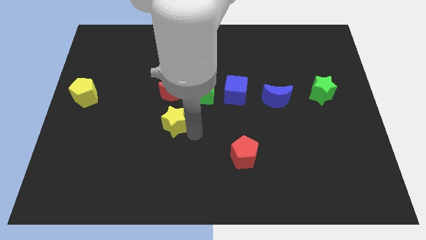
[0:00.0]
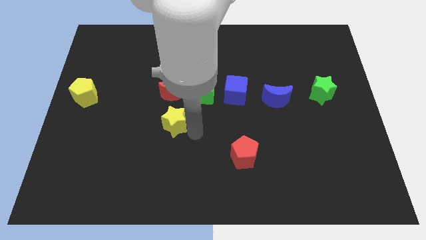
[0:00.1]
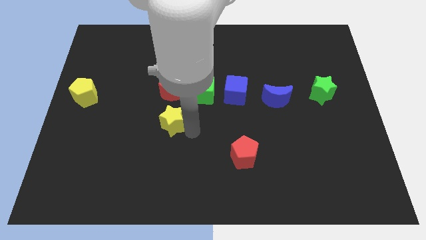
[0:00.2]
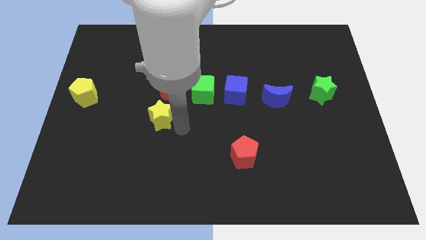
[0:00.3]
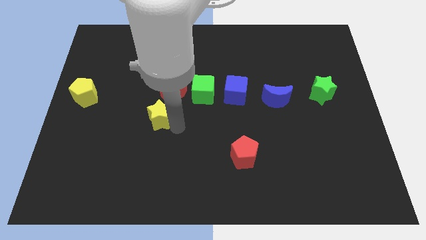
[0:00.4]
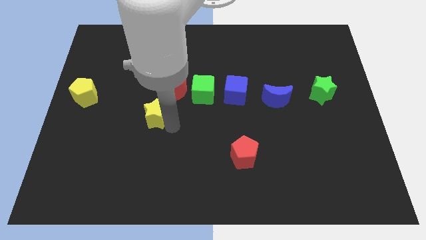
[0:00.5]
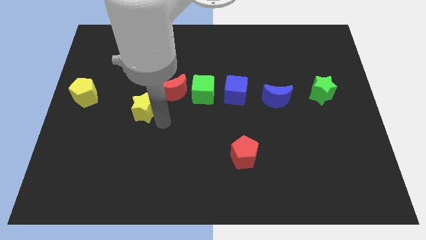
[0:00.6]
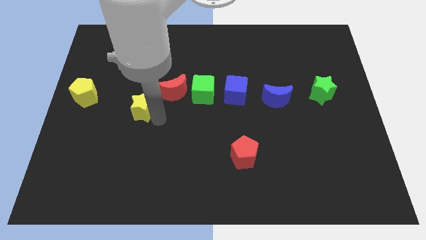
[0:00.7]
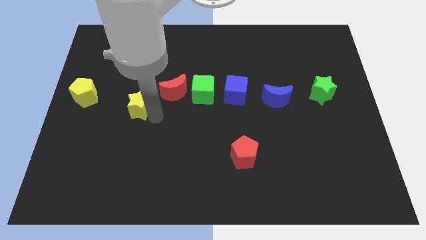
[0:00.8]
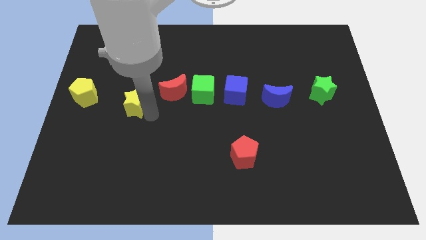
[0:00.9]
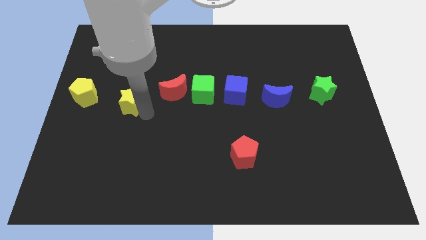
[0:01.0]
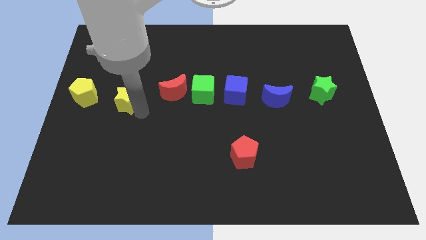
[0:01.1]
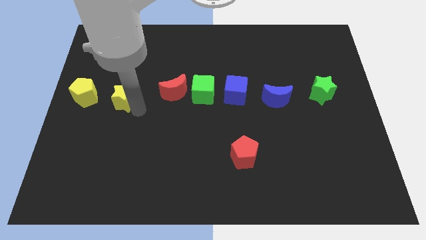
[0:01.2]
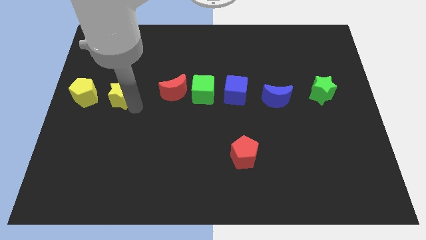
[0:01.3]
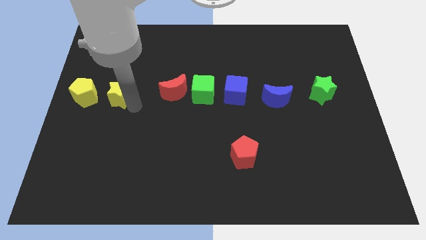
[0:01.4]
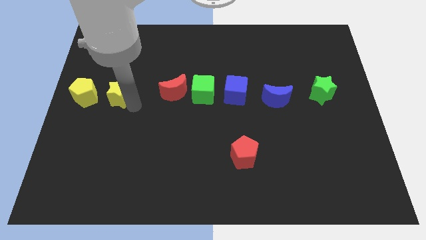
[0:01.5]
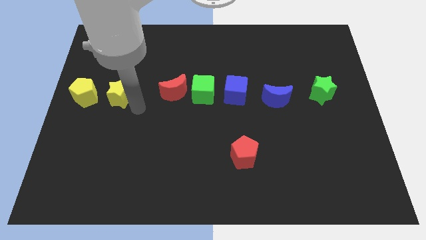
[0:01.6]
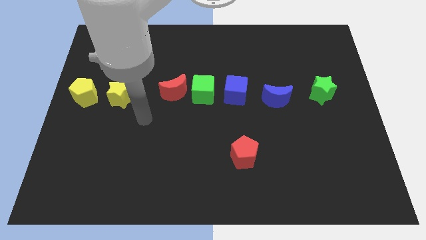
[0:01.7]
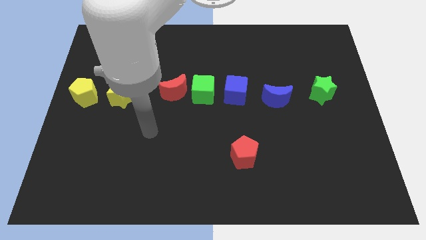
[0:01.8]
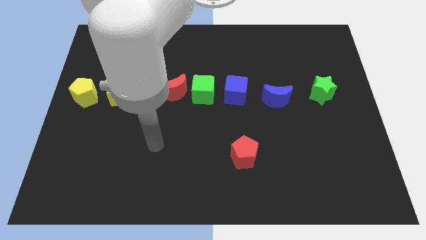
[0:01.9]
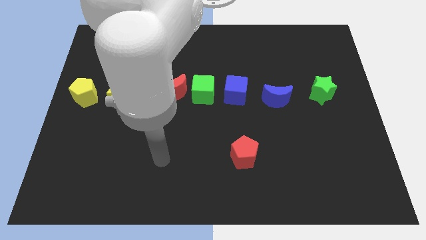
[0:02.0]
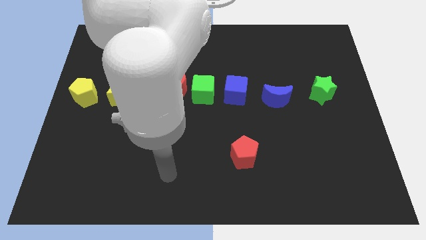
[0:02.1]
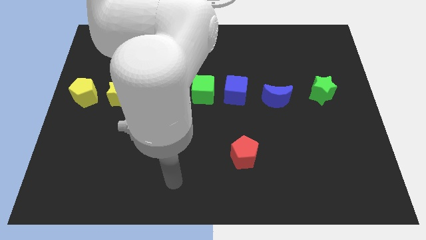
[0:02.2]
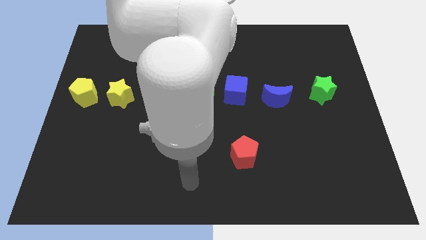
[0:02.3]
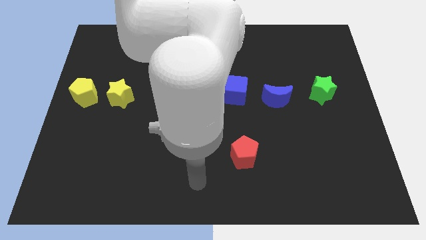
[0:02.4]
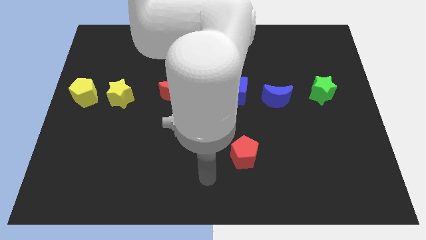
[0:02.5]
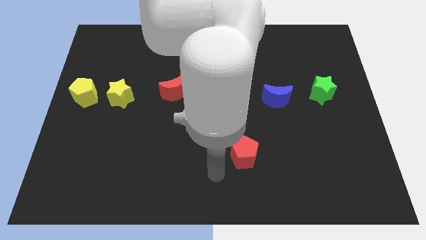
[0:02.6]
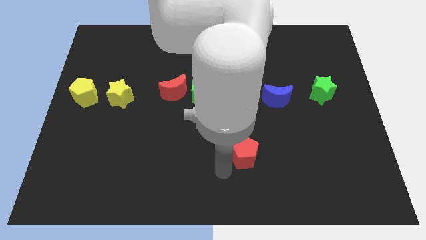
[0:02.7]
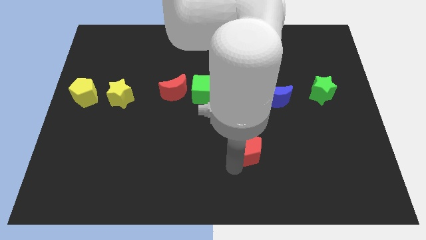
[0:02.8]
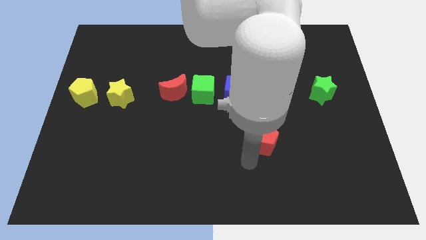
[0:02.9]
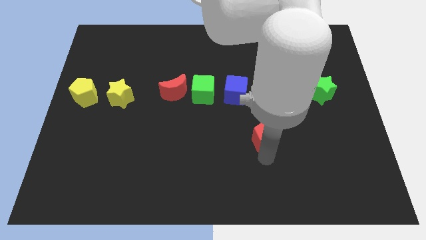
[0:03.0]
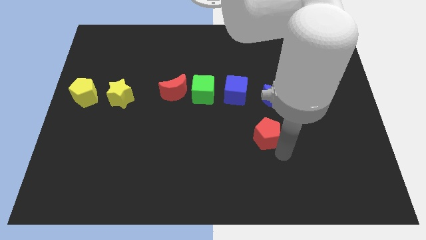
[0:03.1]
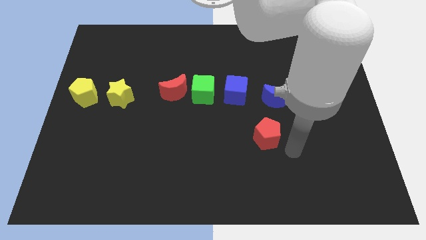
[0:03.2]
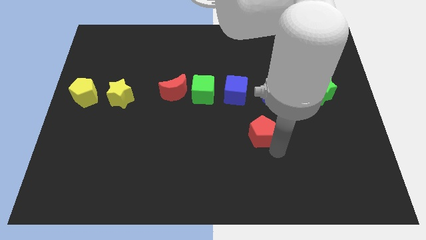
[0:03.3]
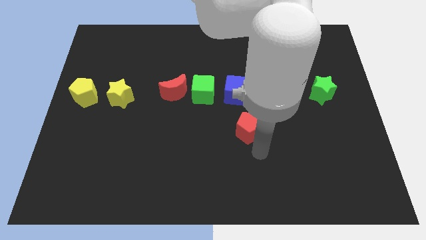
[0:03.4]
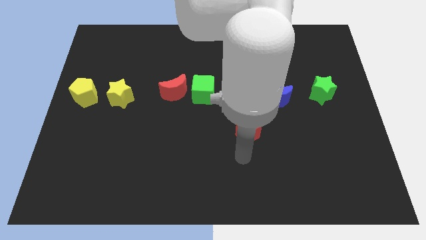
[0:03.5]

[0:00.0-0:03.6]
slightly move the red pentagon up

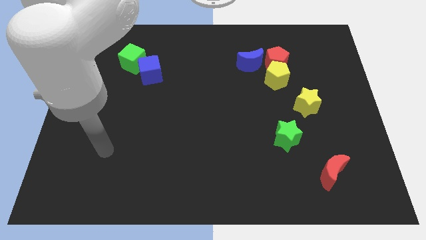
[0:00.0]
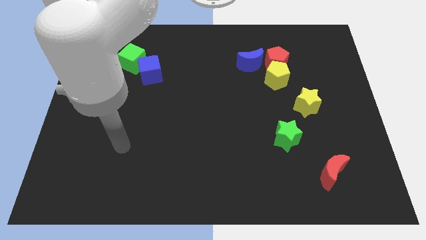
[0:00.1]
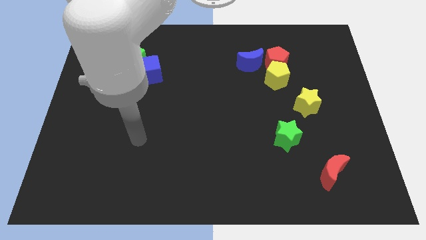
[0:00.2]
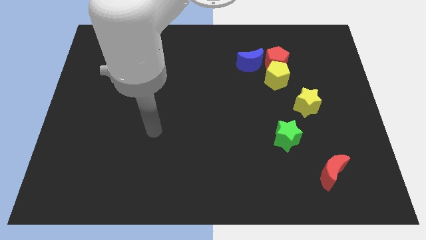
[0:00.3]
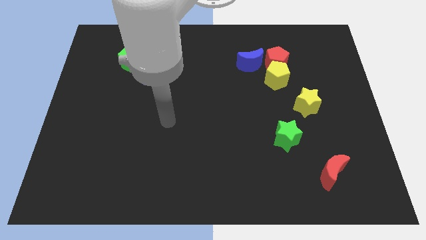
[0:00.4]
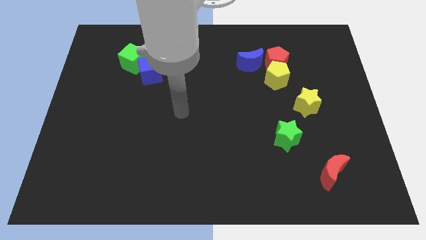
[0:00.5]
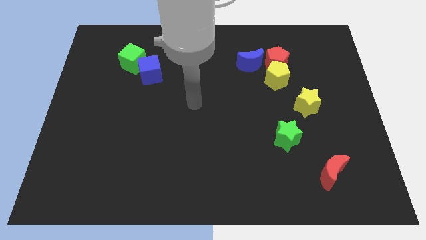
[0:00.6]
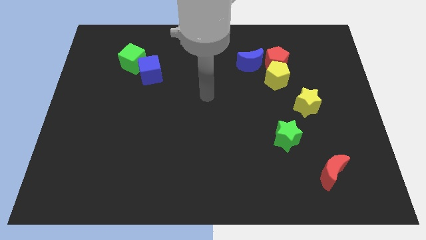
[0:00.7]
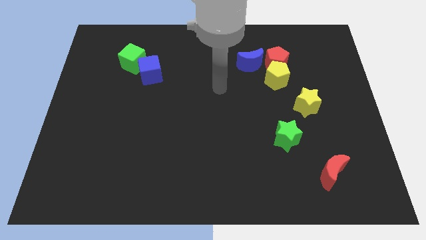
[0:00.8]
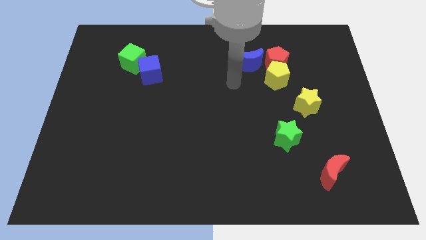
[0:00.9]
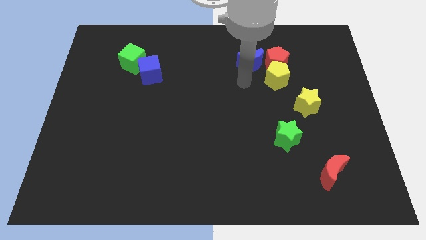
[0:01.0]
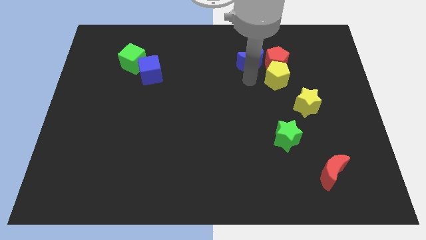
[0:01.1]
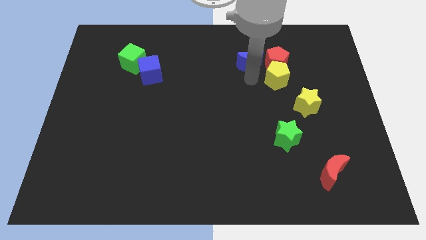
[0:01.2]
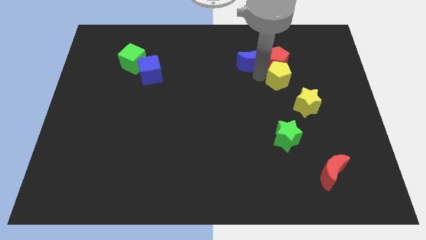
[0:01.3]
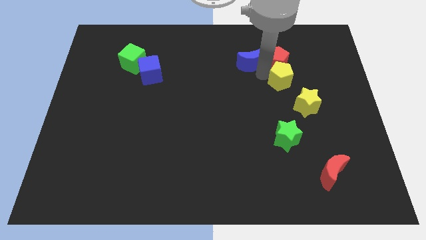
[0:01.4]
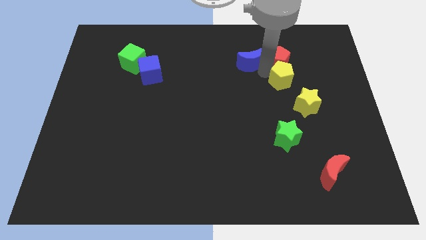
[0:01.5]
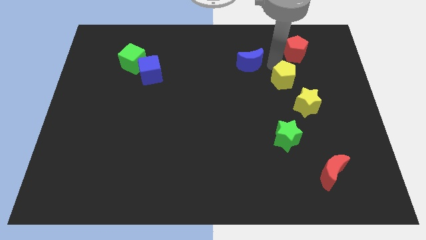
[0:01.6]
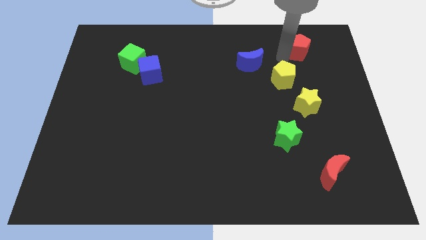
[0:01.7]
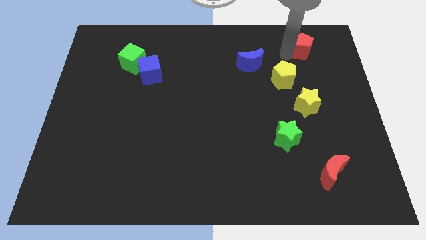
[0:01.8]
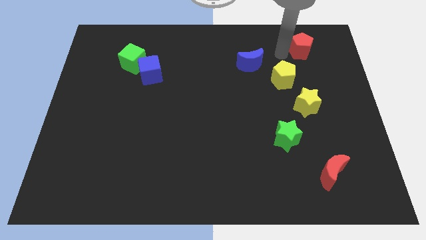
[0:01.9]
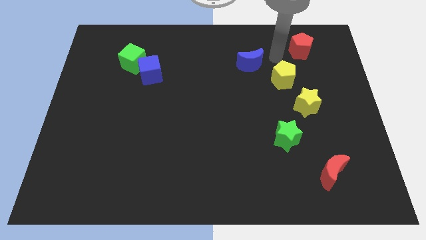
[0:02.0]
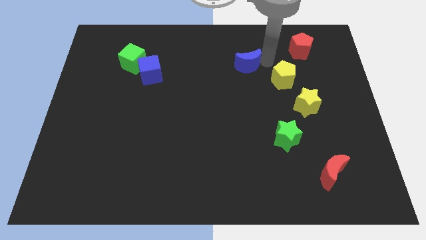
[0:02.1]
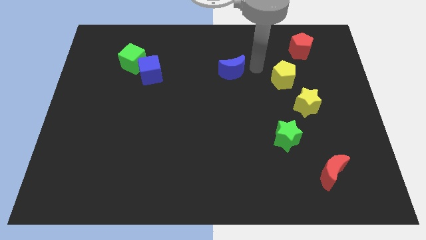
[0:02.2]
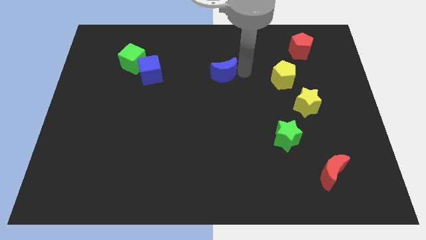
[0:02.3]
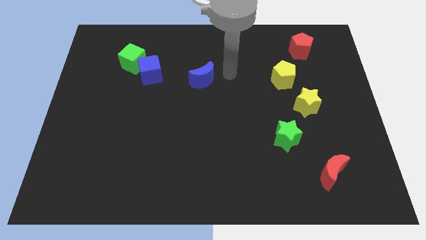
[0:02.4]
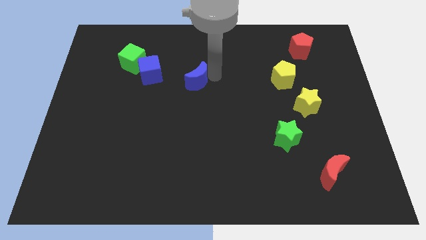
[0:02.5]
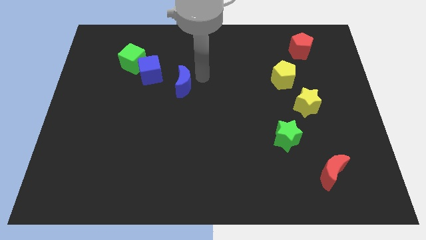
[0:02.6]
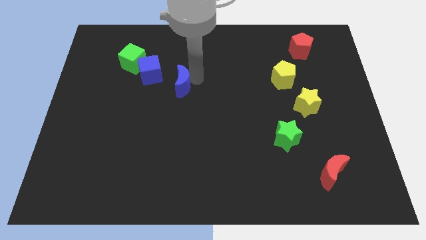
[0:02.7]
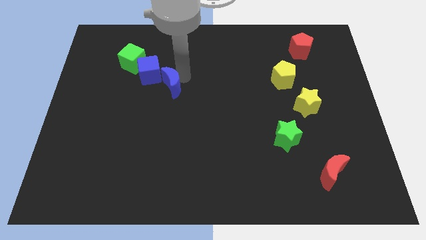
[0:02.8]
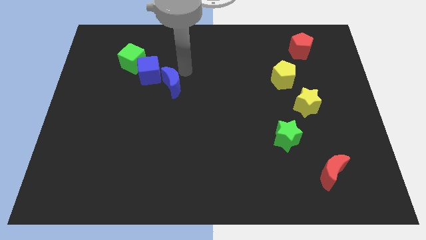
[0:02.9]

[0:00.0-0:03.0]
separate the blue crescent and red pentagon

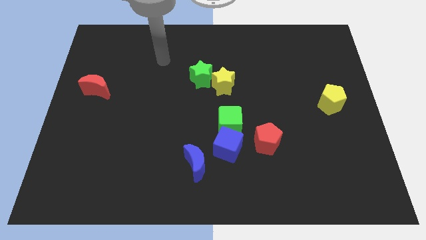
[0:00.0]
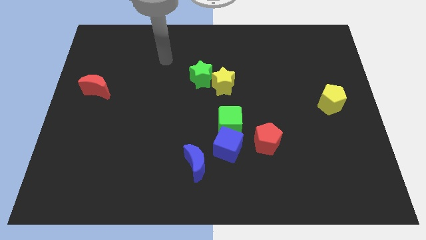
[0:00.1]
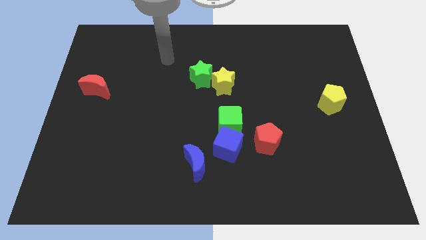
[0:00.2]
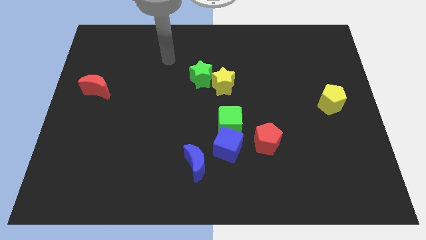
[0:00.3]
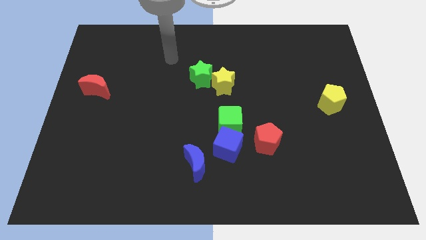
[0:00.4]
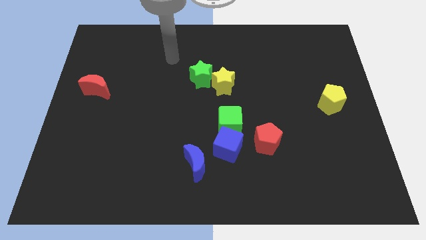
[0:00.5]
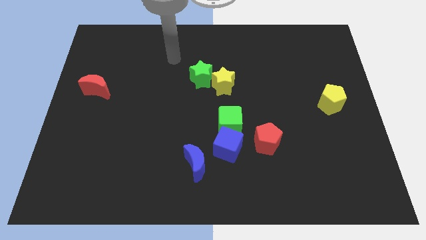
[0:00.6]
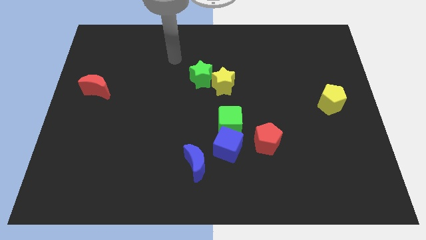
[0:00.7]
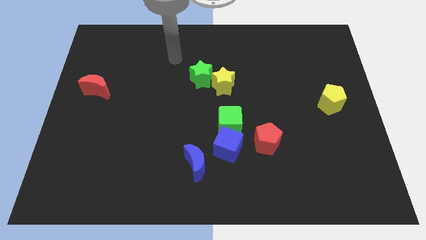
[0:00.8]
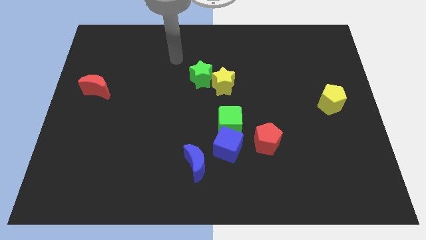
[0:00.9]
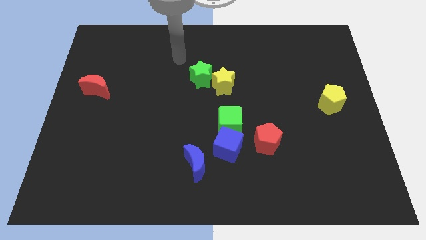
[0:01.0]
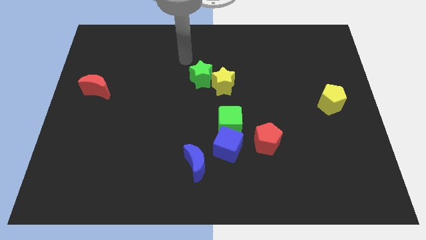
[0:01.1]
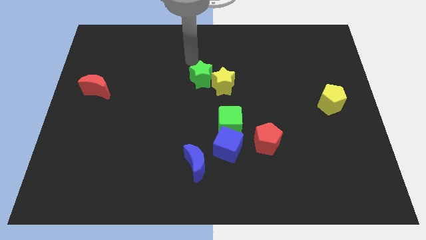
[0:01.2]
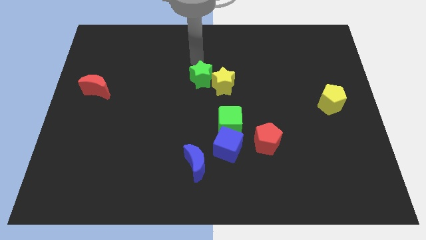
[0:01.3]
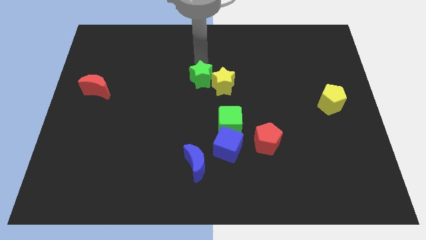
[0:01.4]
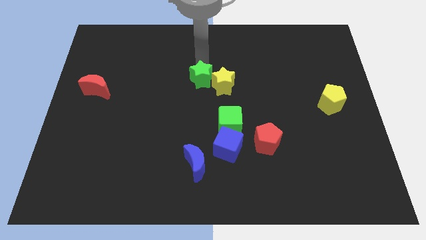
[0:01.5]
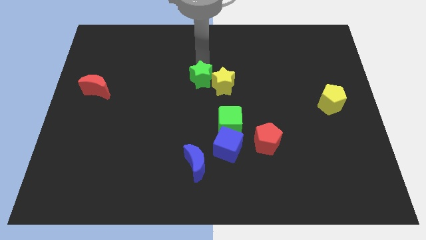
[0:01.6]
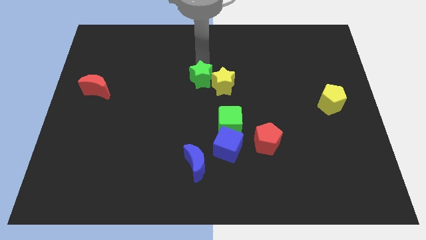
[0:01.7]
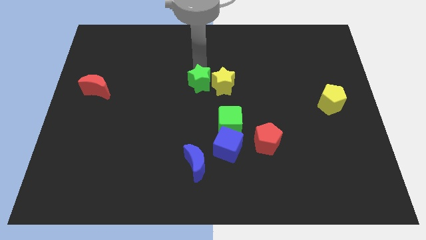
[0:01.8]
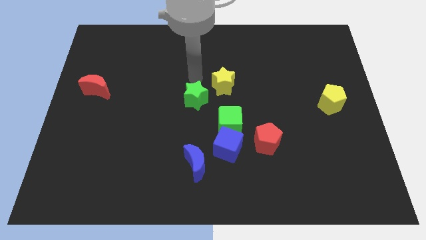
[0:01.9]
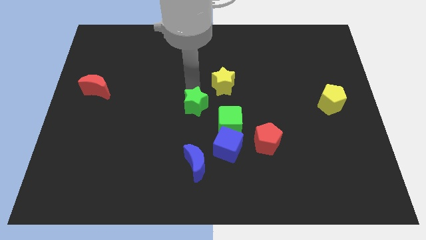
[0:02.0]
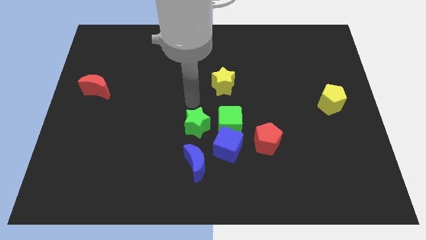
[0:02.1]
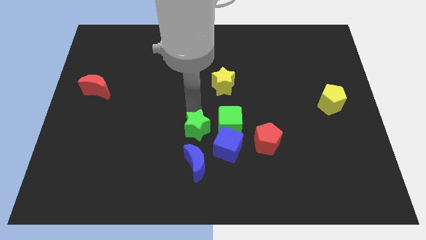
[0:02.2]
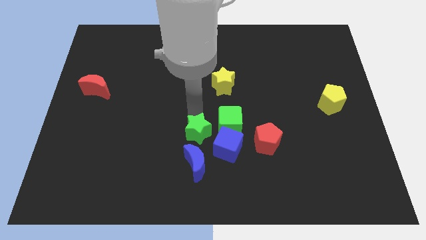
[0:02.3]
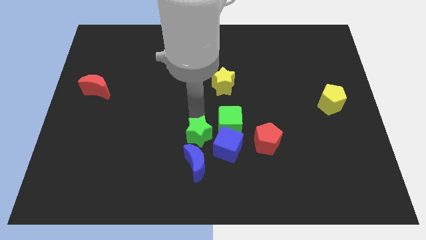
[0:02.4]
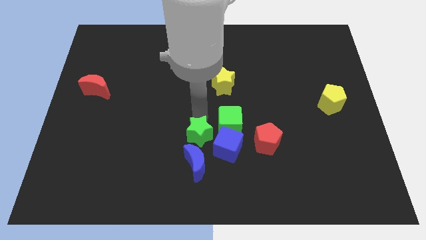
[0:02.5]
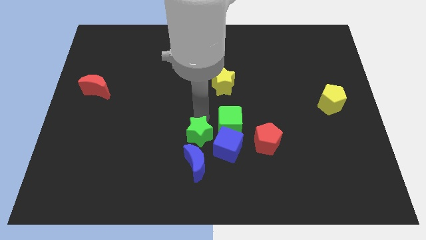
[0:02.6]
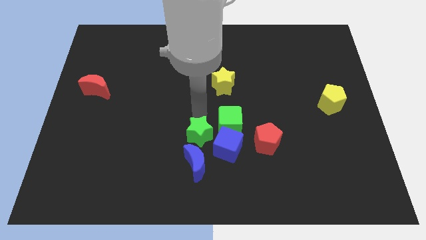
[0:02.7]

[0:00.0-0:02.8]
push the green star above the blue moon
